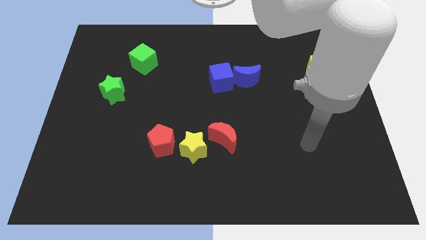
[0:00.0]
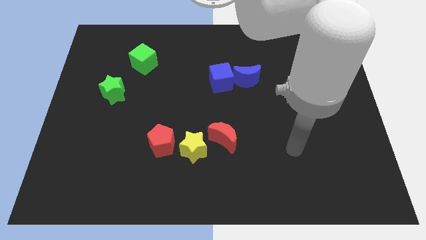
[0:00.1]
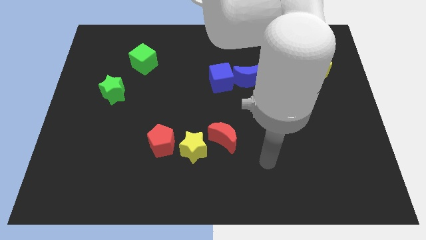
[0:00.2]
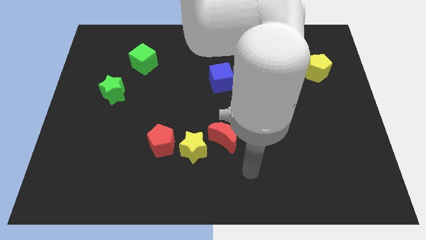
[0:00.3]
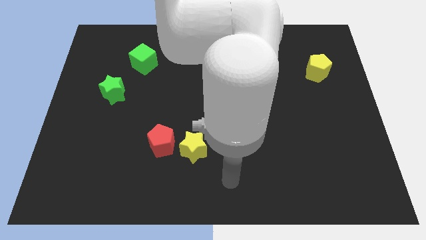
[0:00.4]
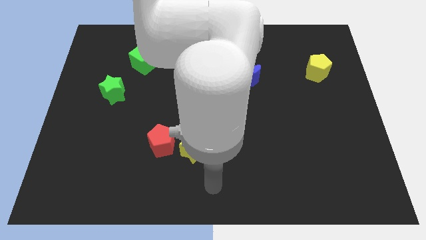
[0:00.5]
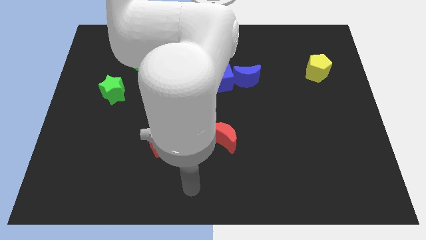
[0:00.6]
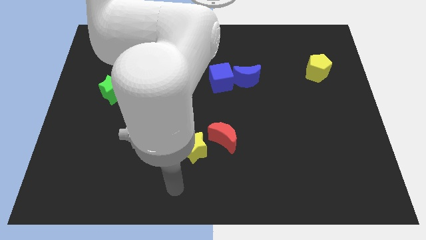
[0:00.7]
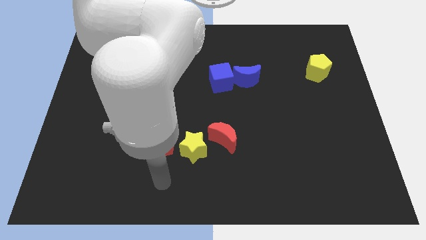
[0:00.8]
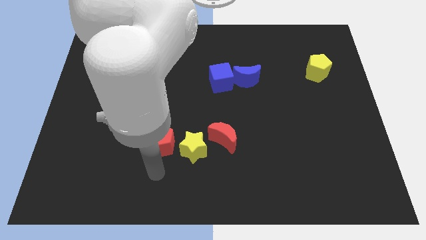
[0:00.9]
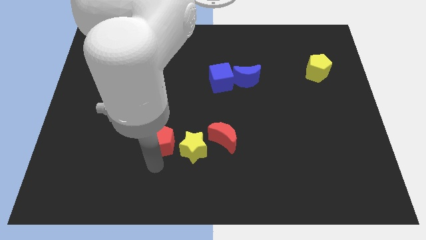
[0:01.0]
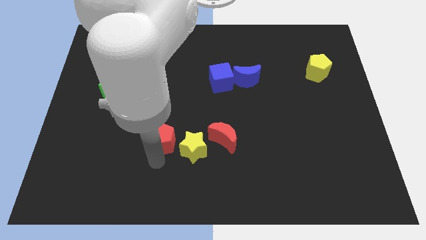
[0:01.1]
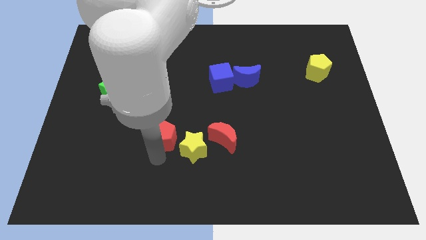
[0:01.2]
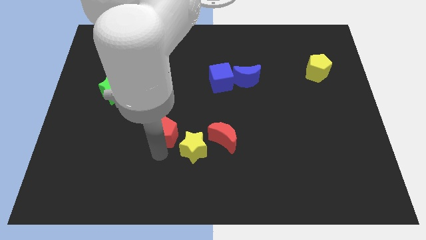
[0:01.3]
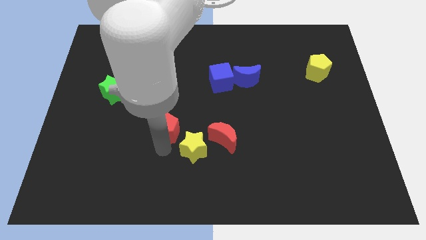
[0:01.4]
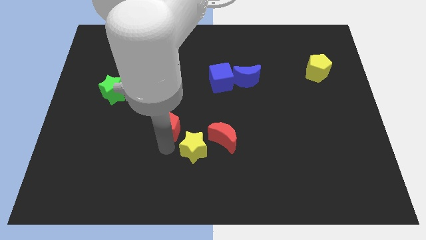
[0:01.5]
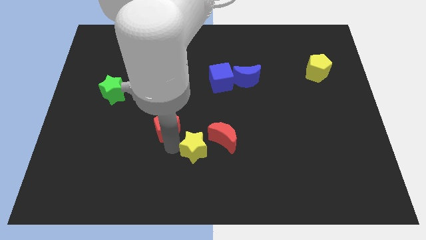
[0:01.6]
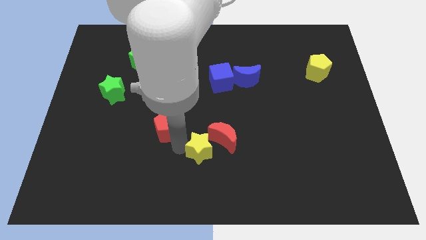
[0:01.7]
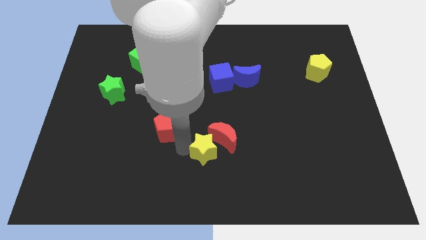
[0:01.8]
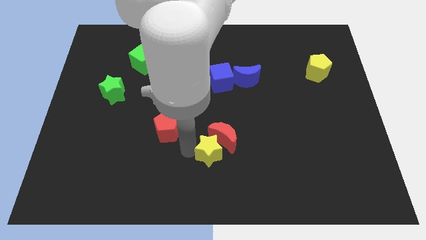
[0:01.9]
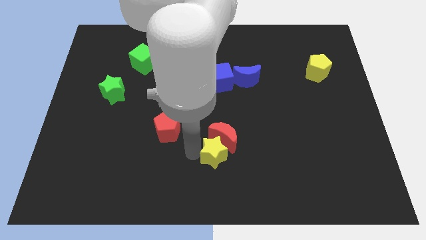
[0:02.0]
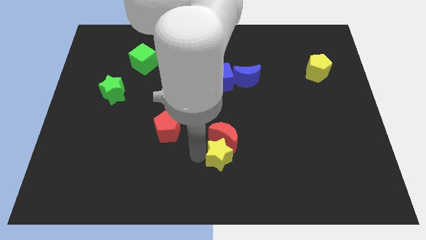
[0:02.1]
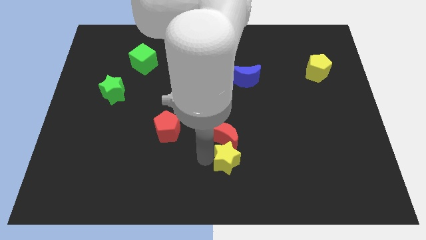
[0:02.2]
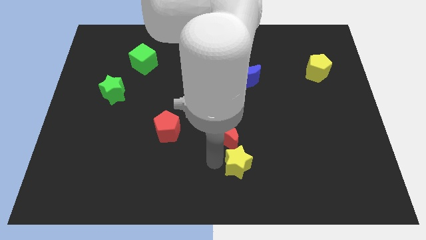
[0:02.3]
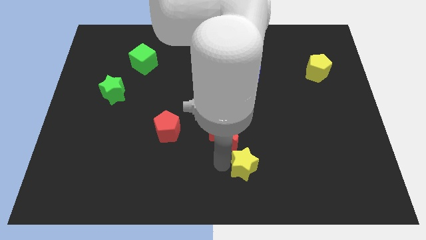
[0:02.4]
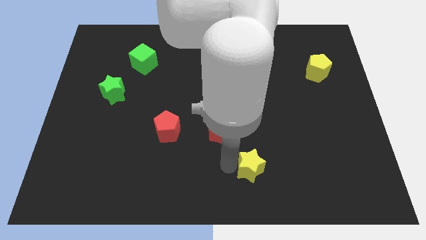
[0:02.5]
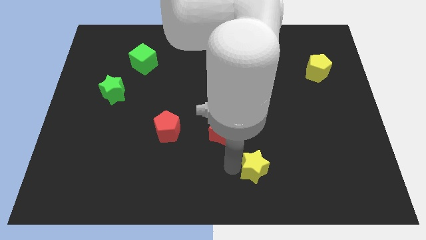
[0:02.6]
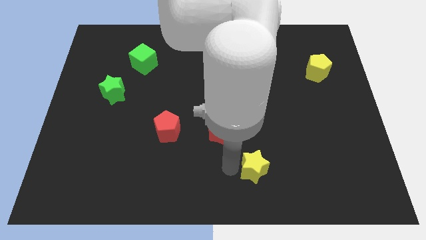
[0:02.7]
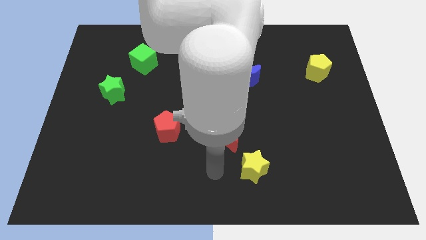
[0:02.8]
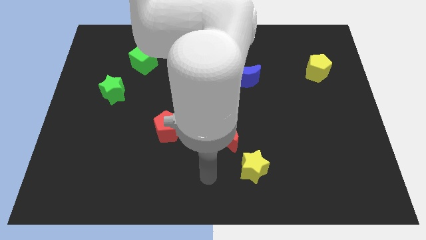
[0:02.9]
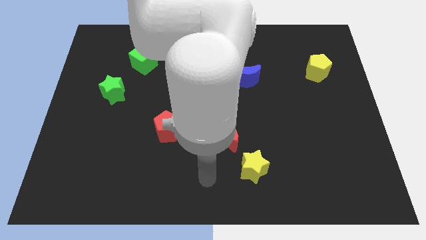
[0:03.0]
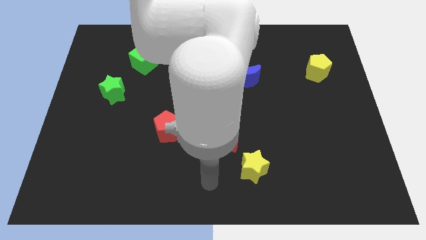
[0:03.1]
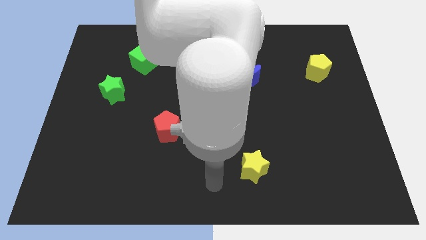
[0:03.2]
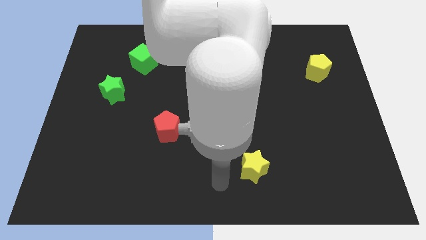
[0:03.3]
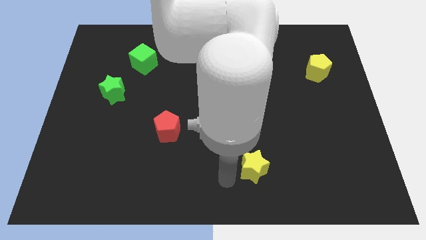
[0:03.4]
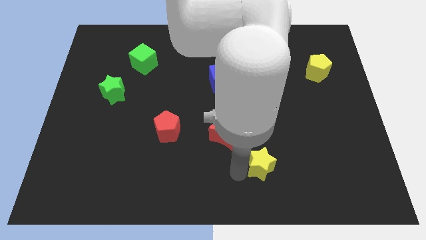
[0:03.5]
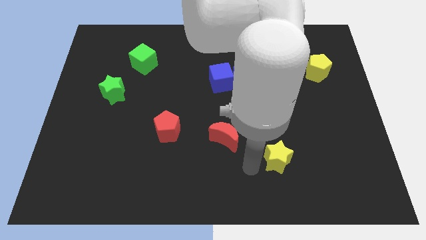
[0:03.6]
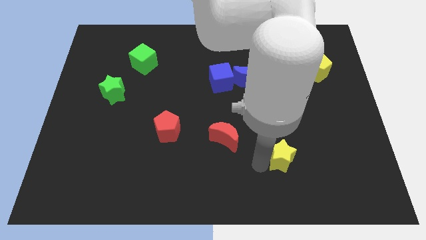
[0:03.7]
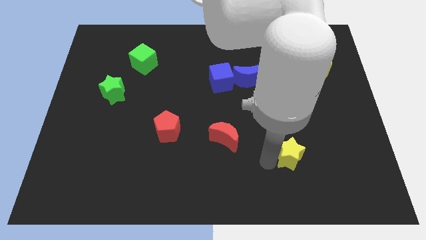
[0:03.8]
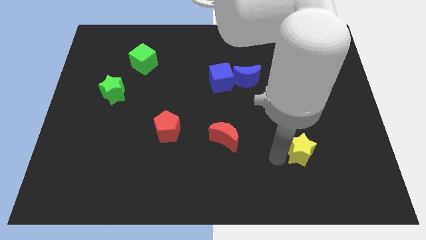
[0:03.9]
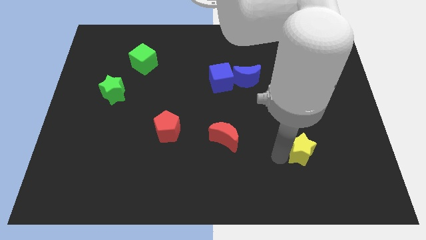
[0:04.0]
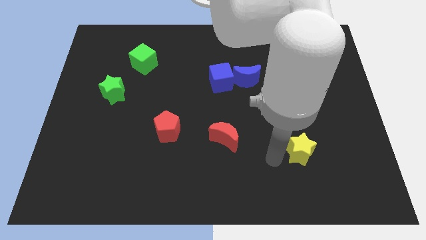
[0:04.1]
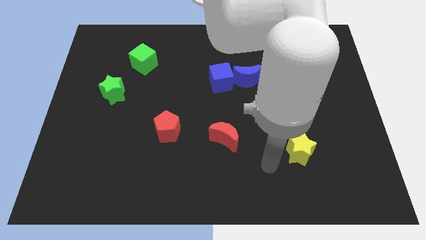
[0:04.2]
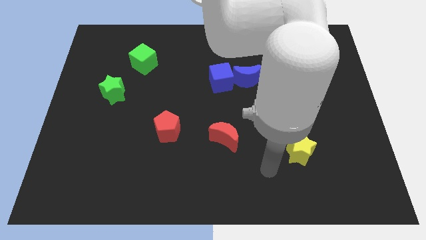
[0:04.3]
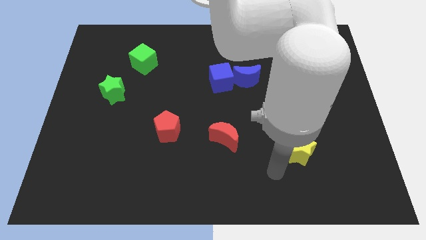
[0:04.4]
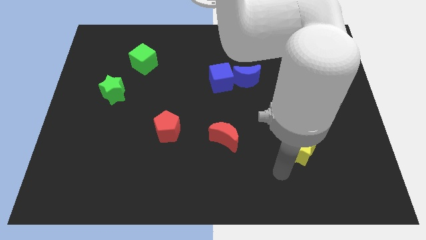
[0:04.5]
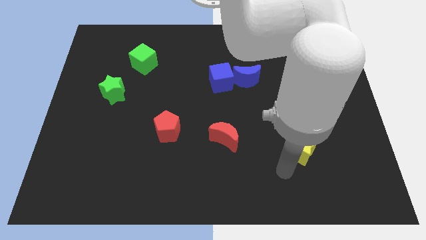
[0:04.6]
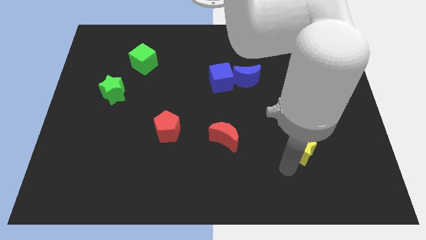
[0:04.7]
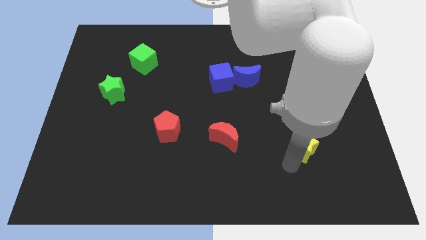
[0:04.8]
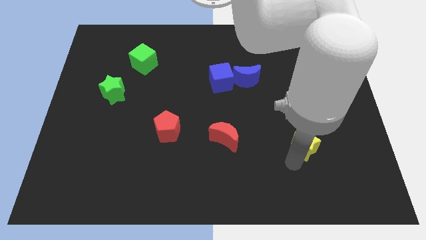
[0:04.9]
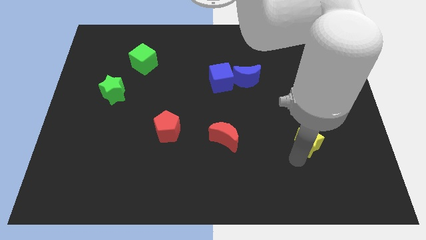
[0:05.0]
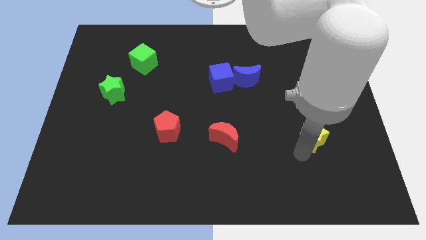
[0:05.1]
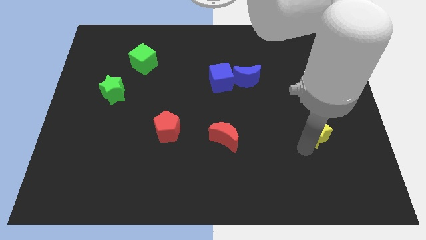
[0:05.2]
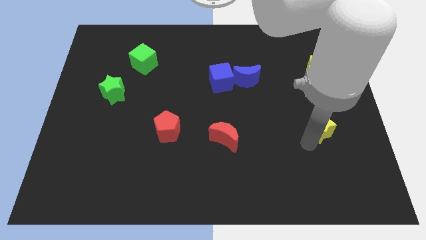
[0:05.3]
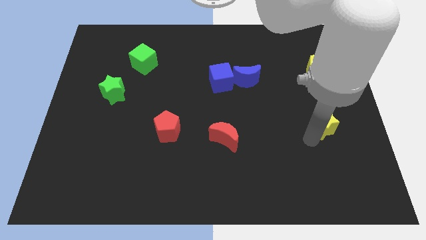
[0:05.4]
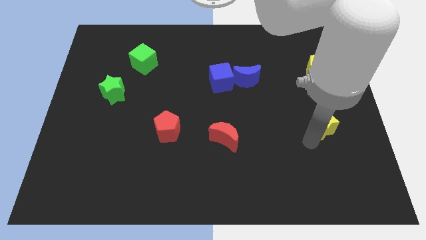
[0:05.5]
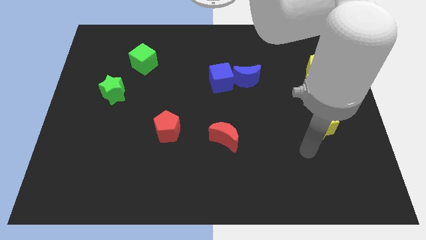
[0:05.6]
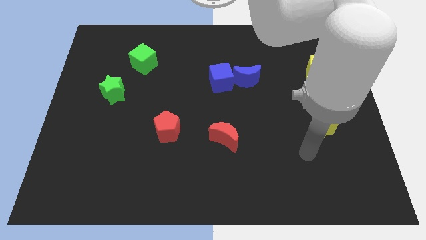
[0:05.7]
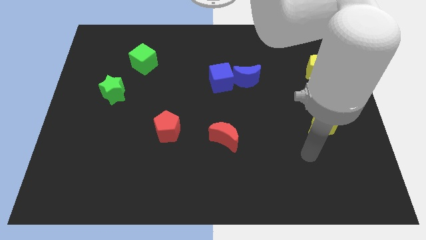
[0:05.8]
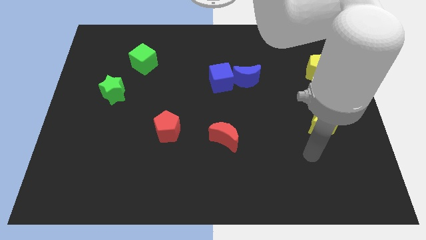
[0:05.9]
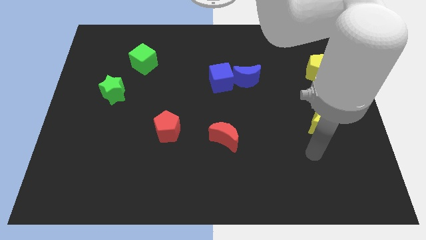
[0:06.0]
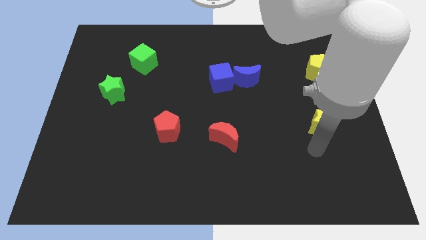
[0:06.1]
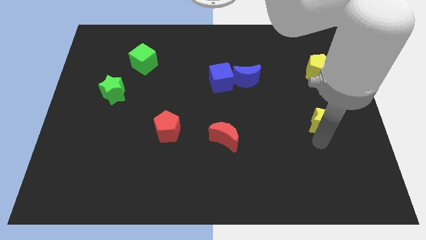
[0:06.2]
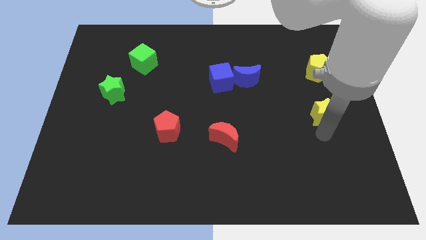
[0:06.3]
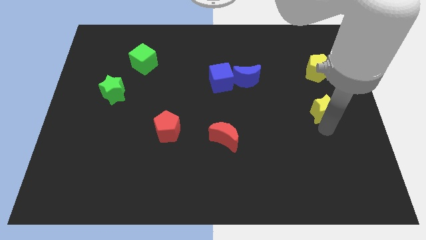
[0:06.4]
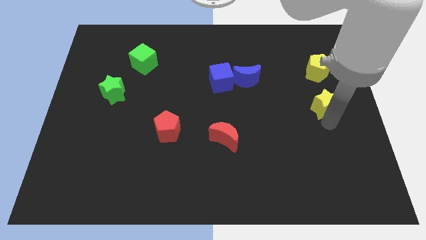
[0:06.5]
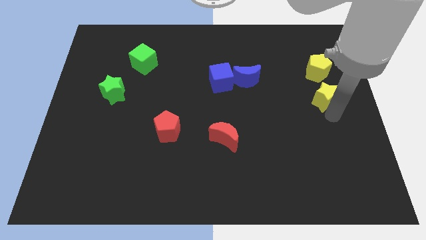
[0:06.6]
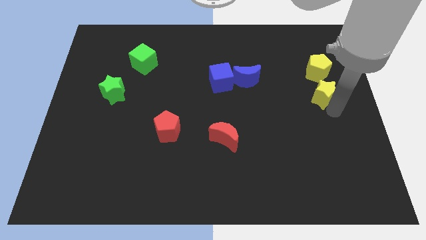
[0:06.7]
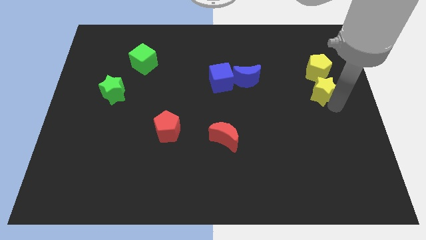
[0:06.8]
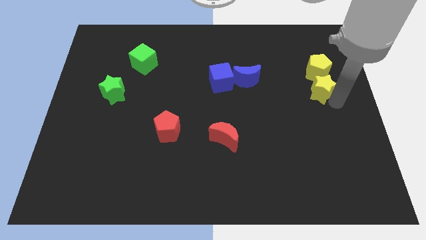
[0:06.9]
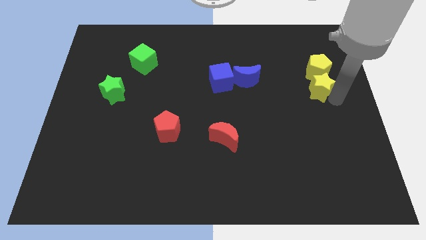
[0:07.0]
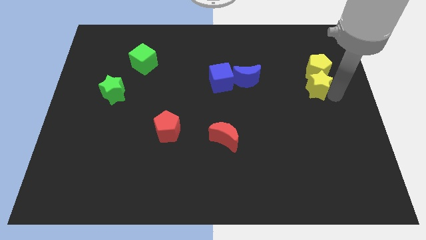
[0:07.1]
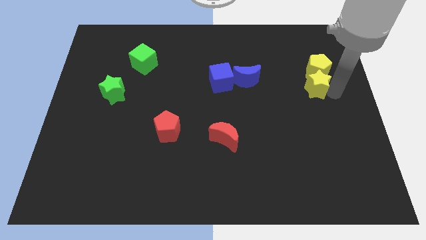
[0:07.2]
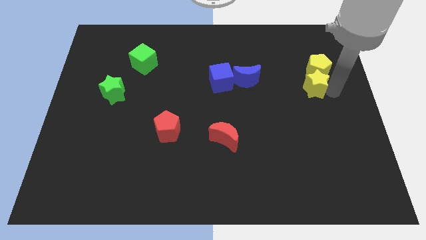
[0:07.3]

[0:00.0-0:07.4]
put the yellow star towards the yellow pentagon

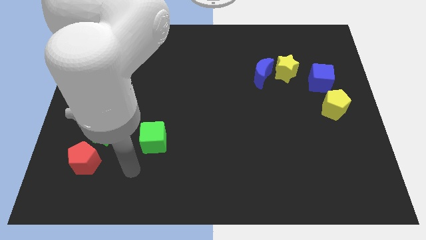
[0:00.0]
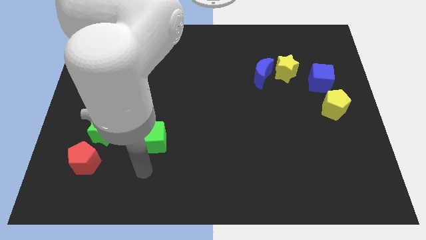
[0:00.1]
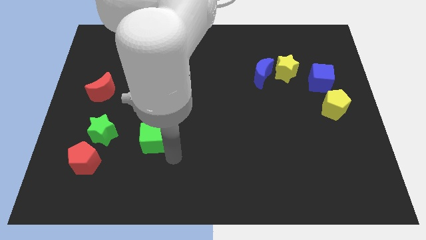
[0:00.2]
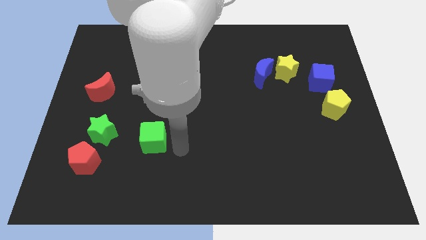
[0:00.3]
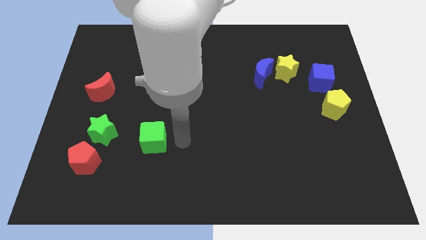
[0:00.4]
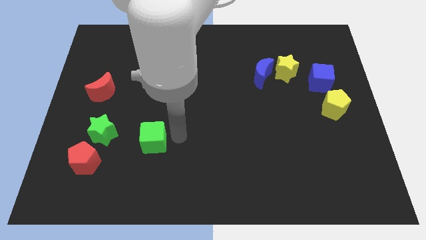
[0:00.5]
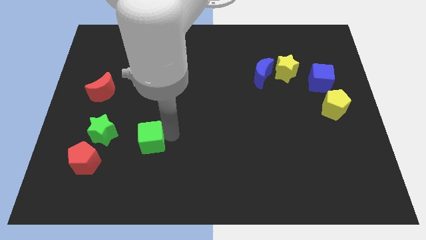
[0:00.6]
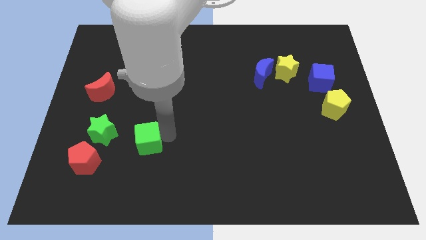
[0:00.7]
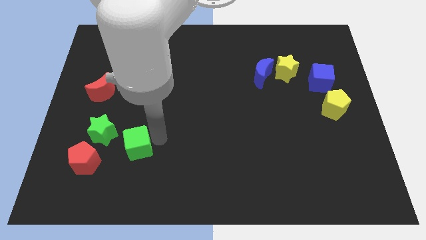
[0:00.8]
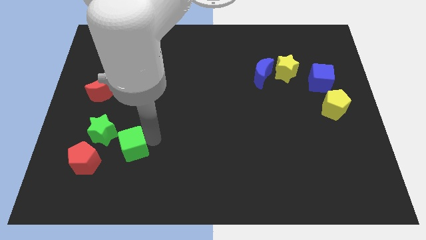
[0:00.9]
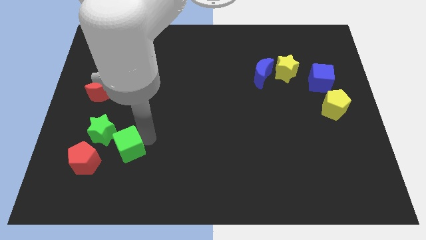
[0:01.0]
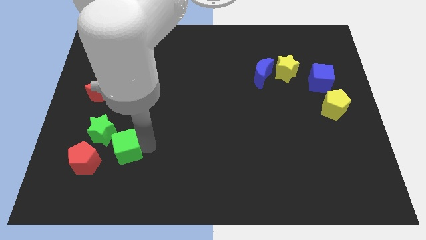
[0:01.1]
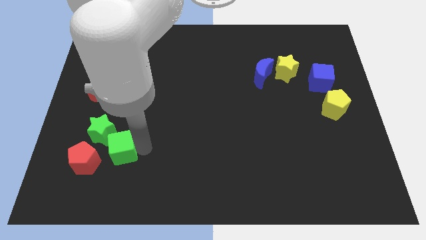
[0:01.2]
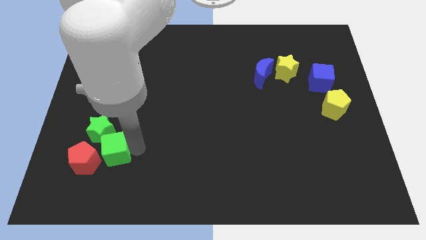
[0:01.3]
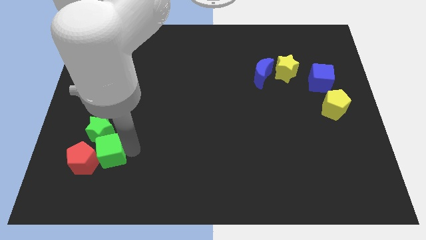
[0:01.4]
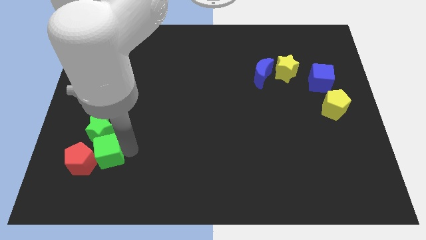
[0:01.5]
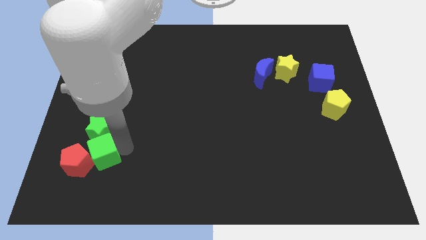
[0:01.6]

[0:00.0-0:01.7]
put the green cube next to the red pentagon
